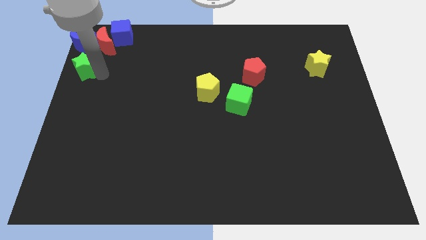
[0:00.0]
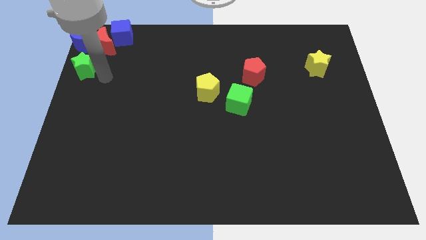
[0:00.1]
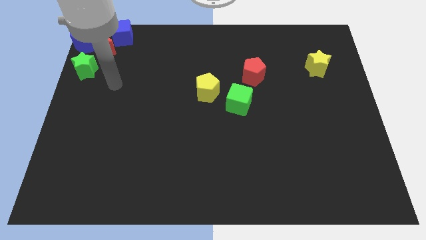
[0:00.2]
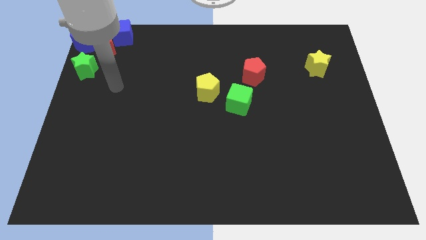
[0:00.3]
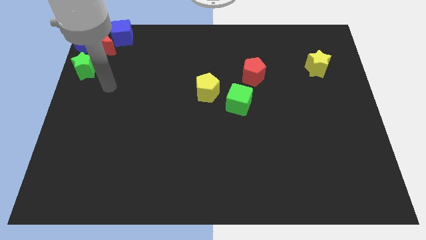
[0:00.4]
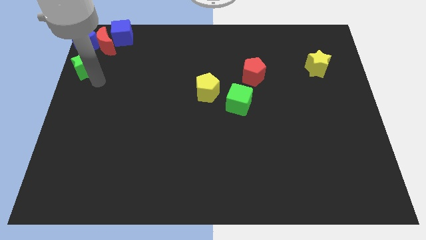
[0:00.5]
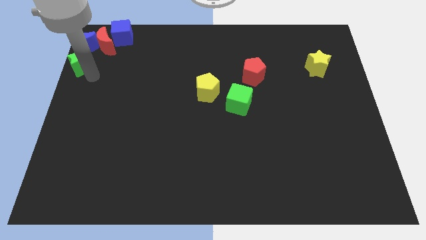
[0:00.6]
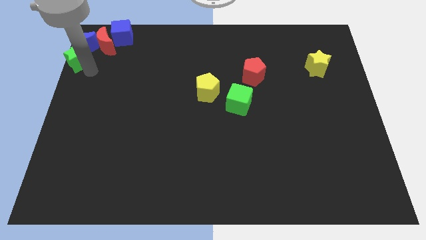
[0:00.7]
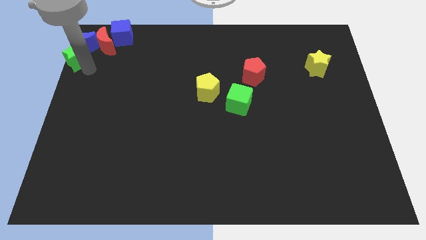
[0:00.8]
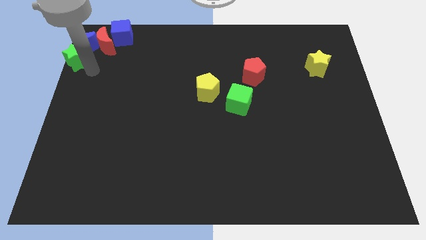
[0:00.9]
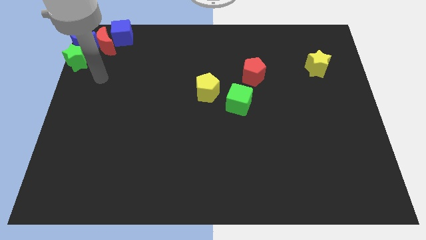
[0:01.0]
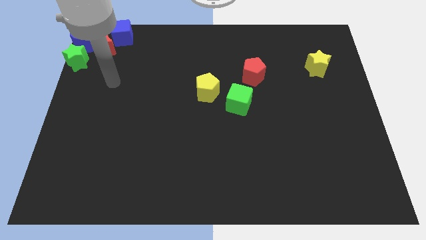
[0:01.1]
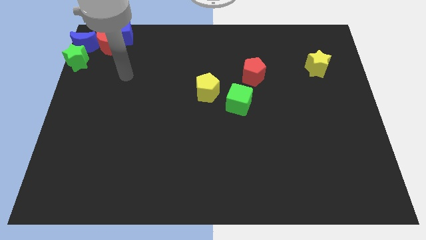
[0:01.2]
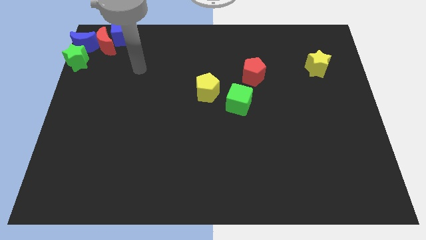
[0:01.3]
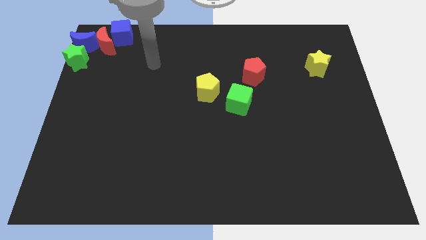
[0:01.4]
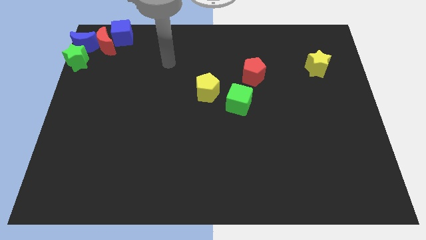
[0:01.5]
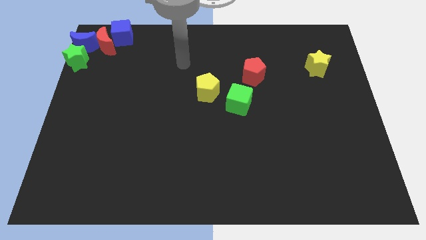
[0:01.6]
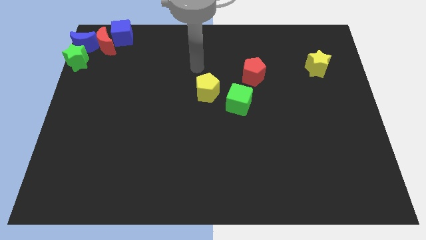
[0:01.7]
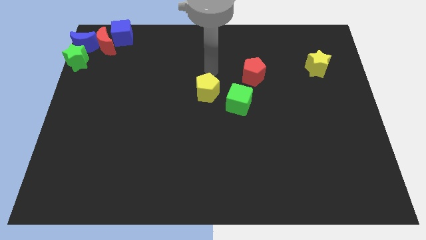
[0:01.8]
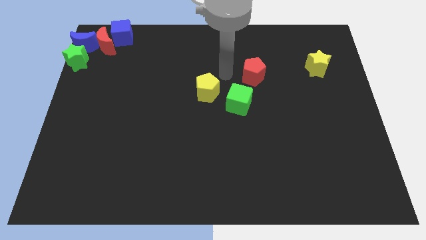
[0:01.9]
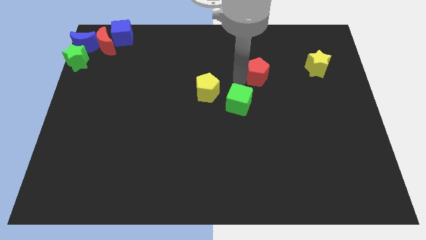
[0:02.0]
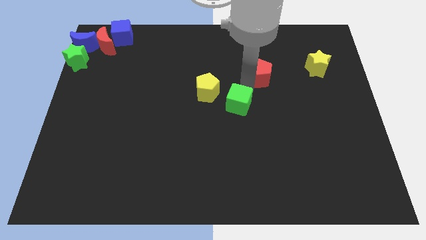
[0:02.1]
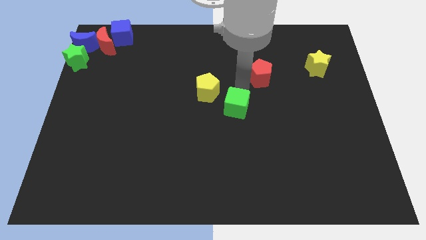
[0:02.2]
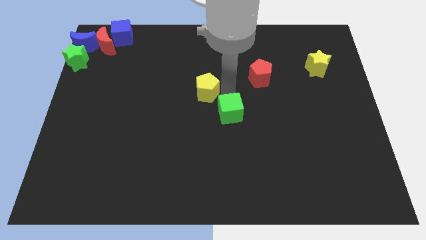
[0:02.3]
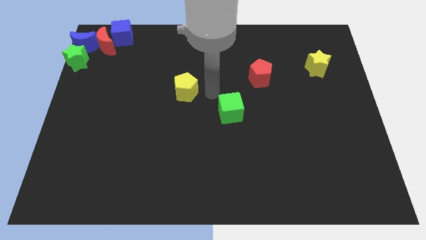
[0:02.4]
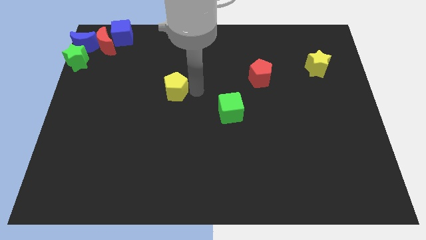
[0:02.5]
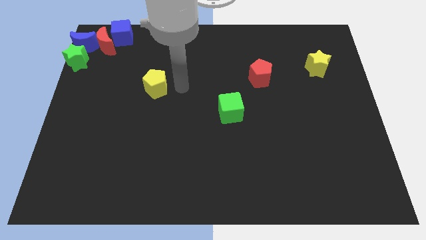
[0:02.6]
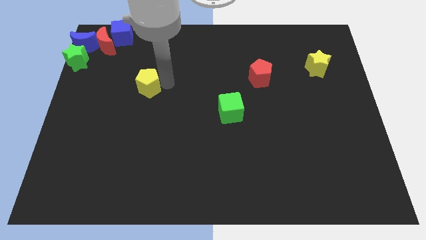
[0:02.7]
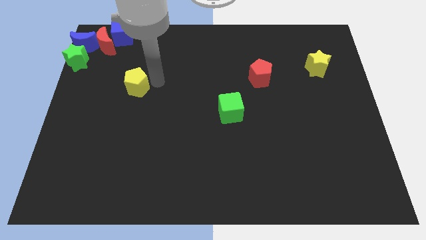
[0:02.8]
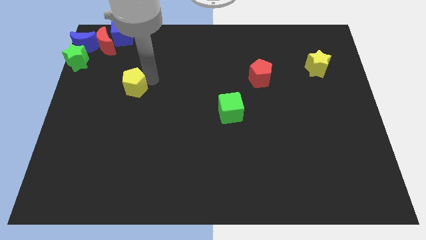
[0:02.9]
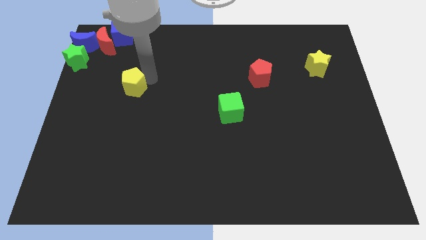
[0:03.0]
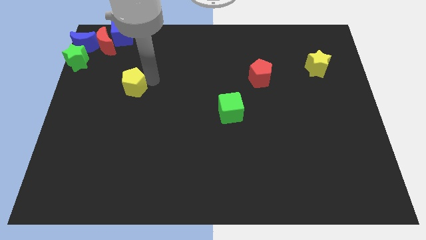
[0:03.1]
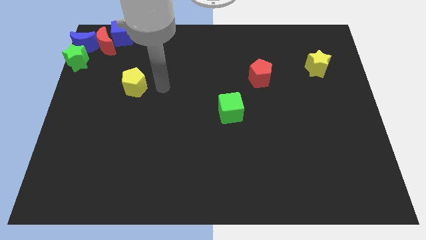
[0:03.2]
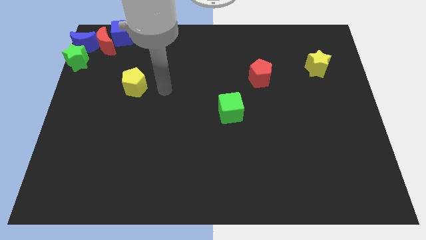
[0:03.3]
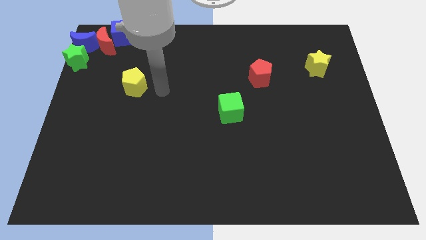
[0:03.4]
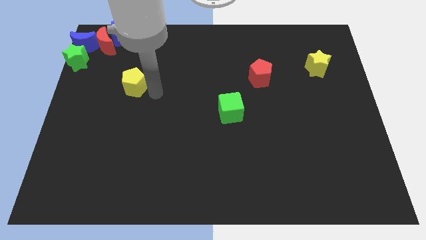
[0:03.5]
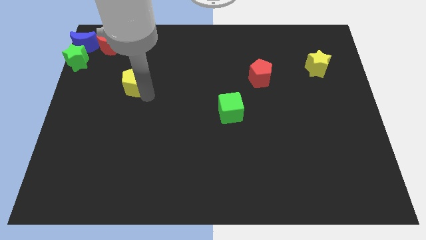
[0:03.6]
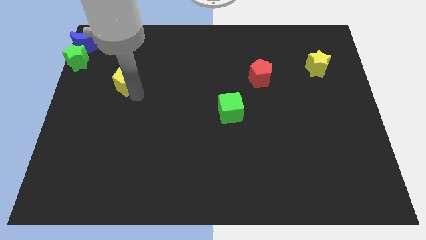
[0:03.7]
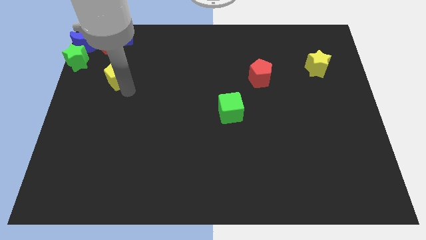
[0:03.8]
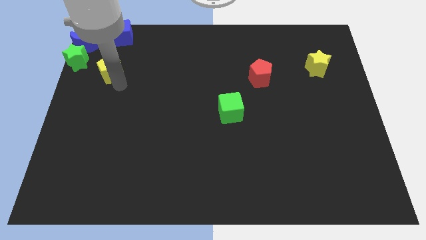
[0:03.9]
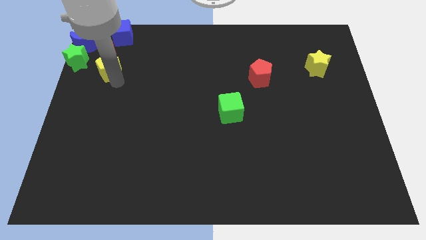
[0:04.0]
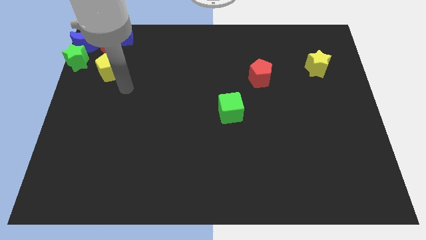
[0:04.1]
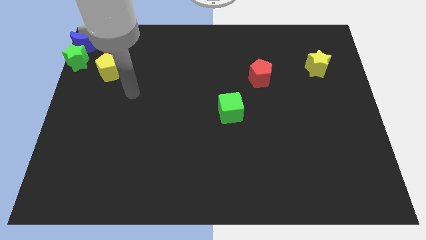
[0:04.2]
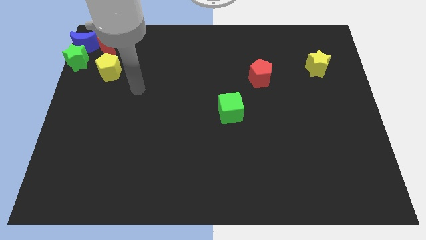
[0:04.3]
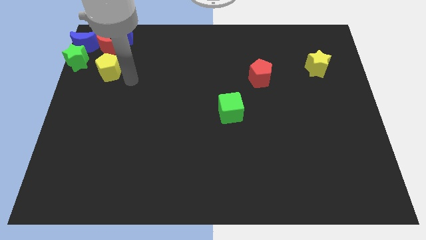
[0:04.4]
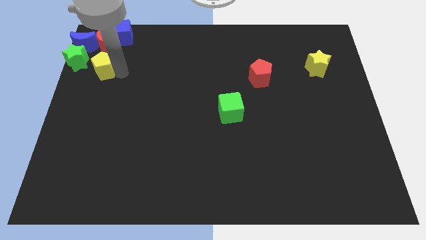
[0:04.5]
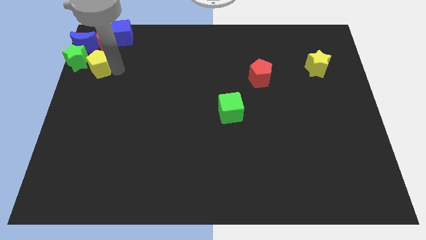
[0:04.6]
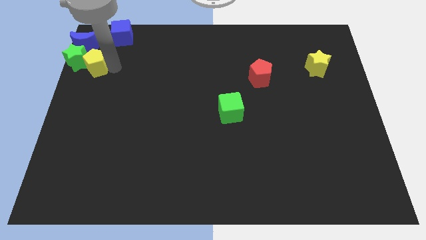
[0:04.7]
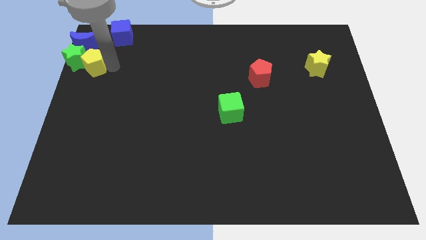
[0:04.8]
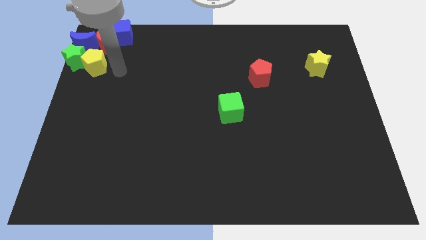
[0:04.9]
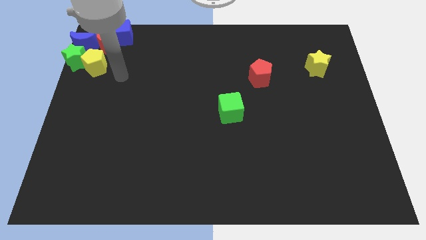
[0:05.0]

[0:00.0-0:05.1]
push the yellow pentagon to the right side of the green star

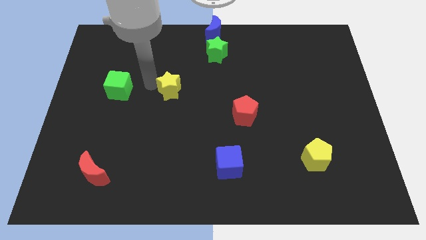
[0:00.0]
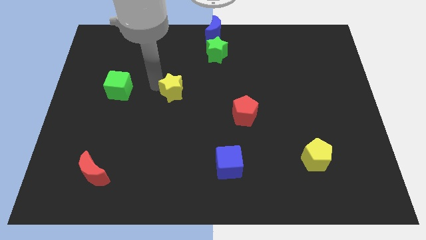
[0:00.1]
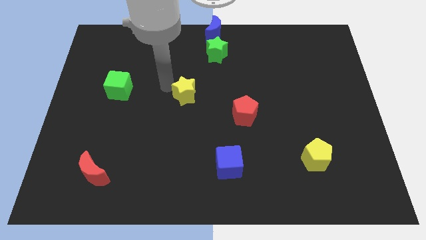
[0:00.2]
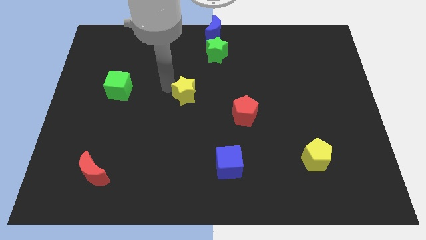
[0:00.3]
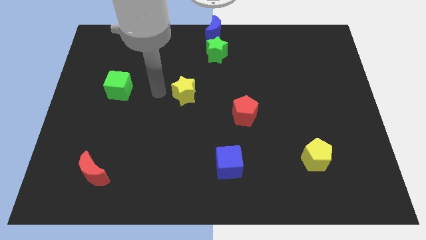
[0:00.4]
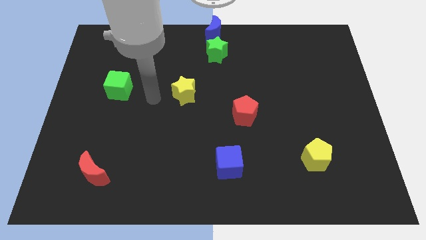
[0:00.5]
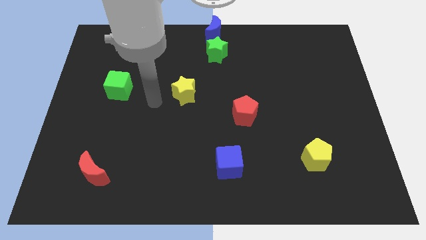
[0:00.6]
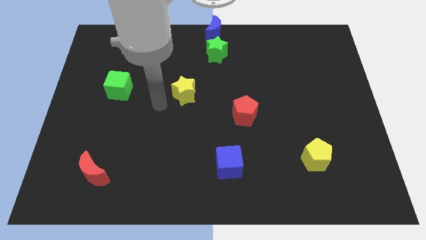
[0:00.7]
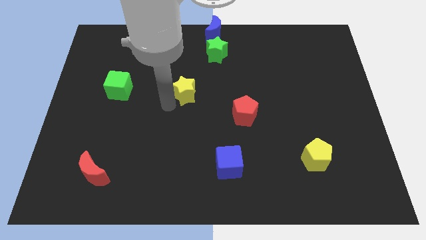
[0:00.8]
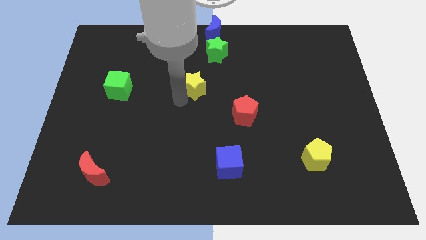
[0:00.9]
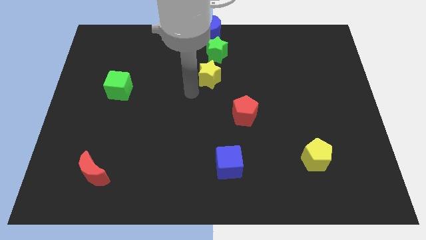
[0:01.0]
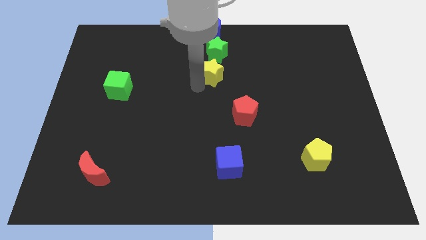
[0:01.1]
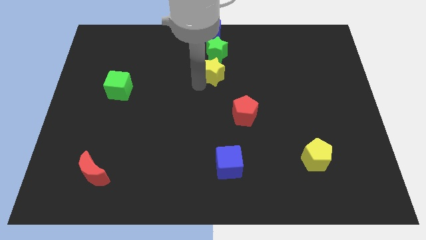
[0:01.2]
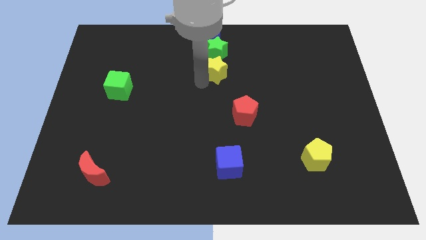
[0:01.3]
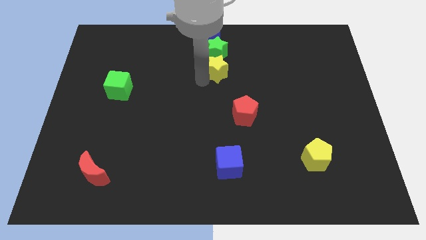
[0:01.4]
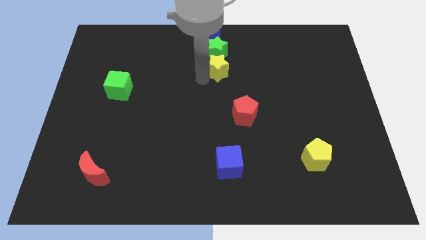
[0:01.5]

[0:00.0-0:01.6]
place the yellow star below the green star

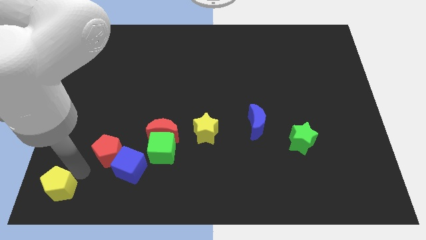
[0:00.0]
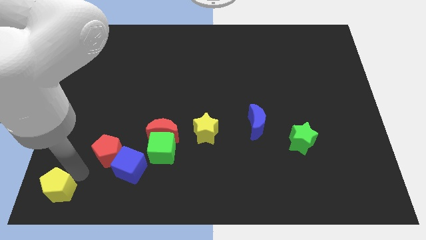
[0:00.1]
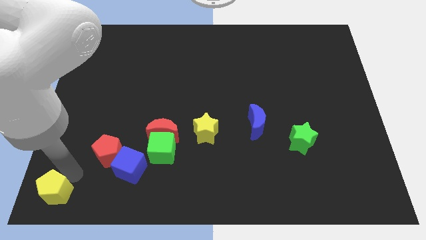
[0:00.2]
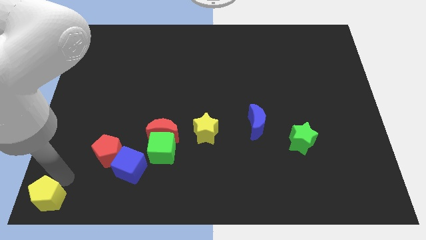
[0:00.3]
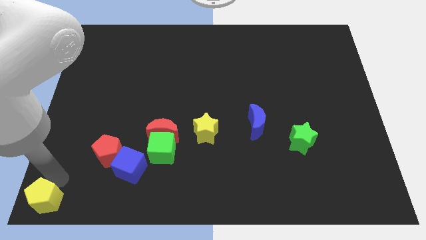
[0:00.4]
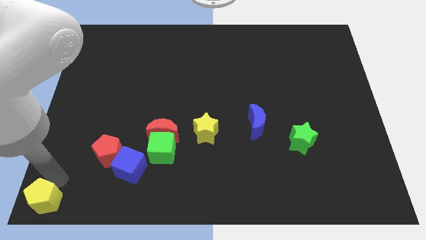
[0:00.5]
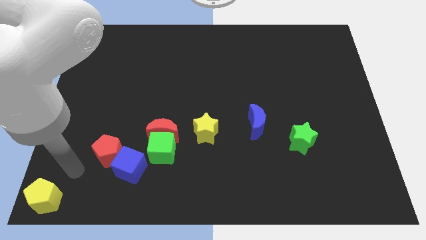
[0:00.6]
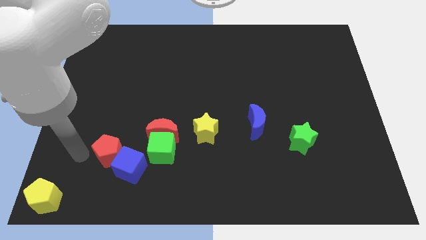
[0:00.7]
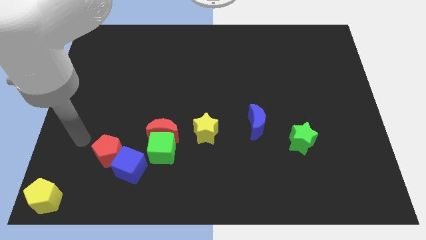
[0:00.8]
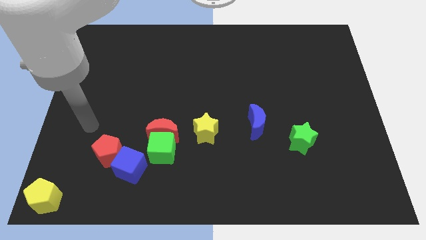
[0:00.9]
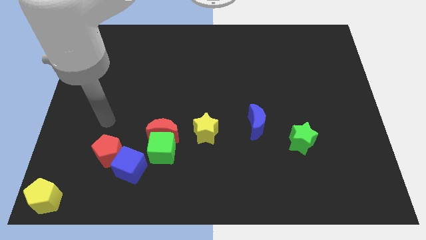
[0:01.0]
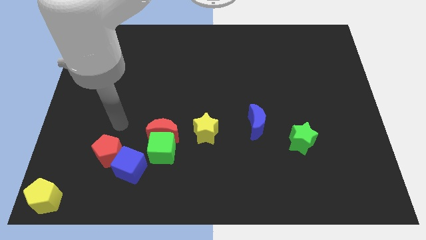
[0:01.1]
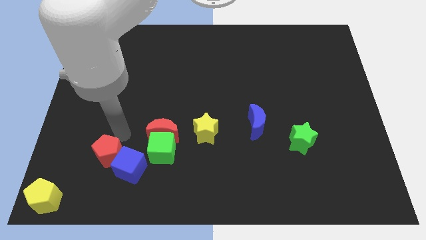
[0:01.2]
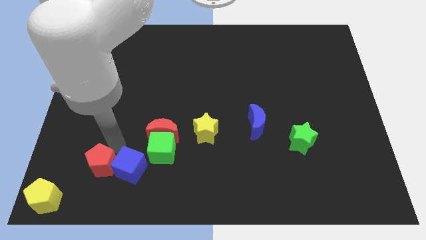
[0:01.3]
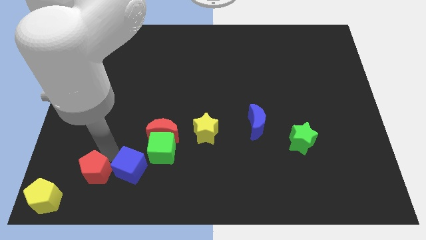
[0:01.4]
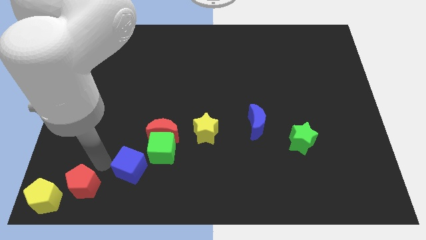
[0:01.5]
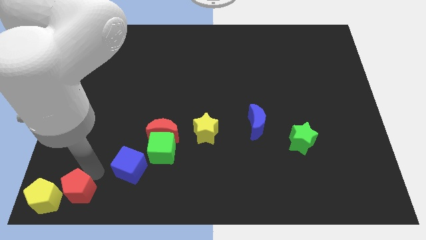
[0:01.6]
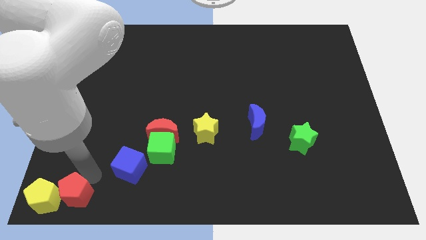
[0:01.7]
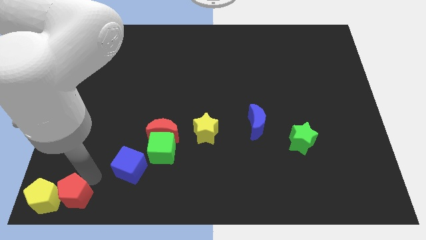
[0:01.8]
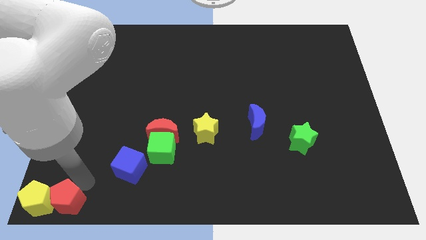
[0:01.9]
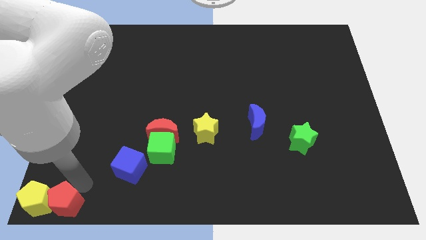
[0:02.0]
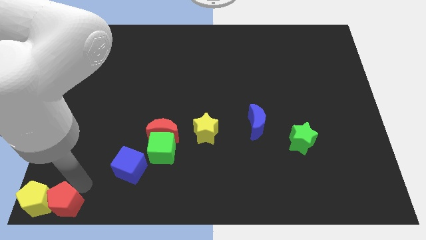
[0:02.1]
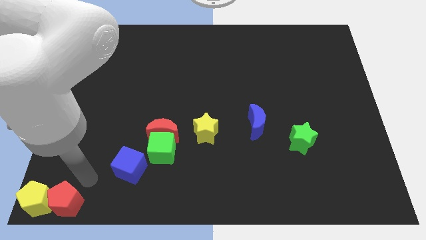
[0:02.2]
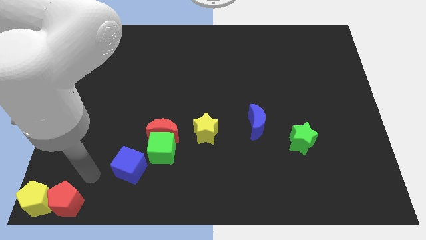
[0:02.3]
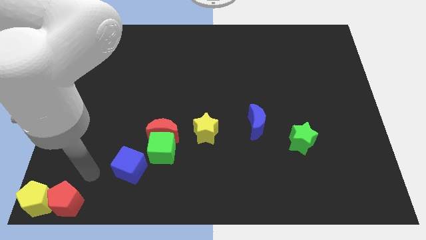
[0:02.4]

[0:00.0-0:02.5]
move the red pentagon near to the yellow pentagon
